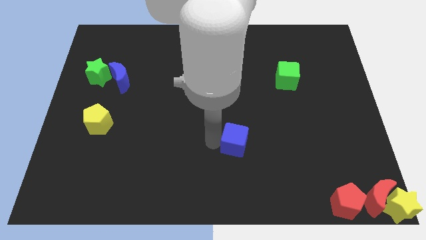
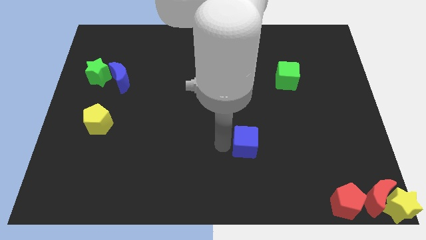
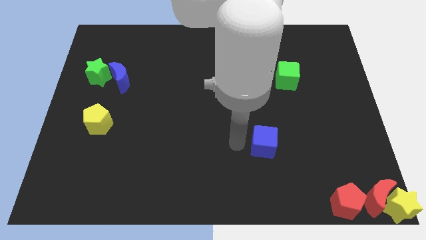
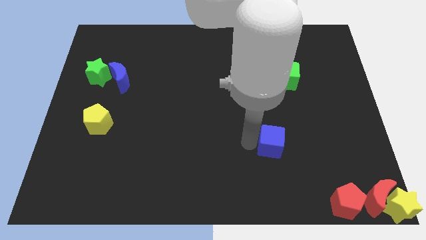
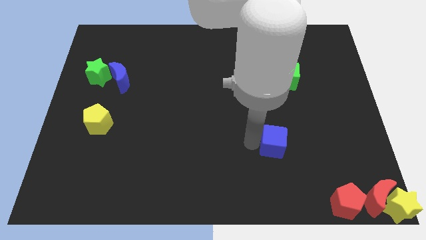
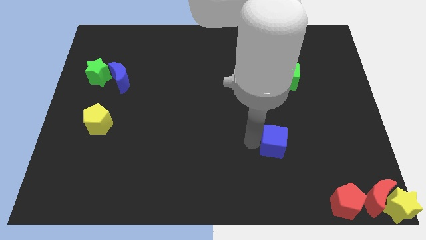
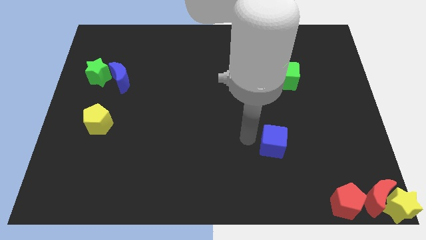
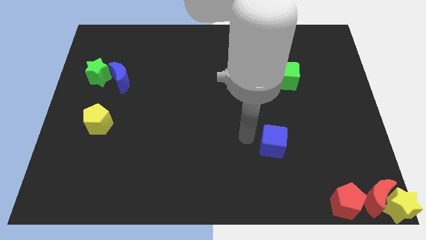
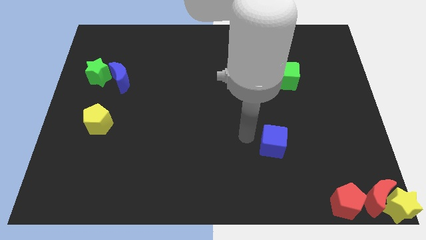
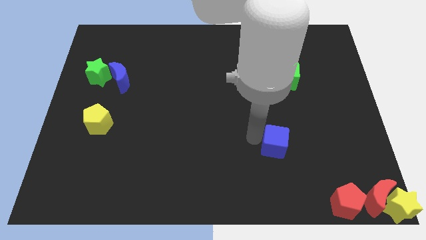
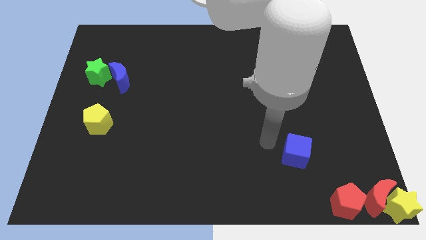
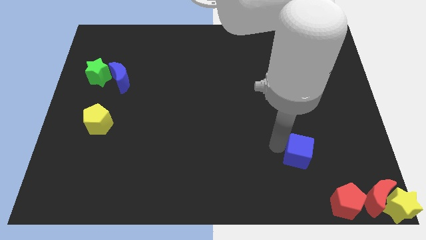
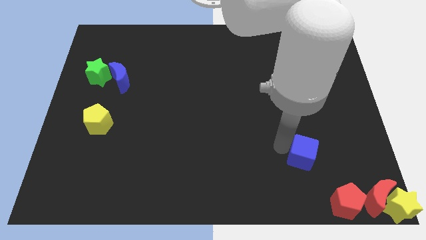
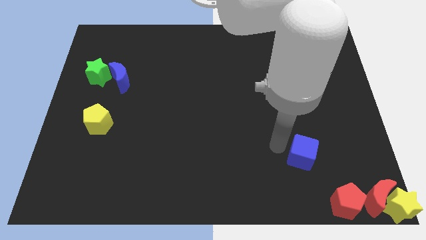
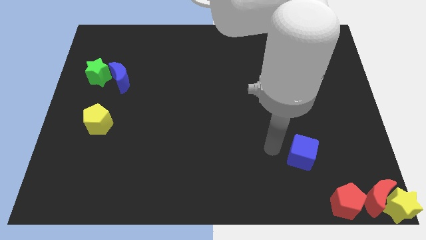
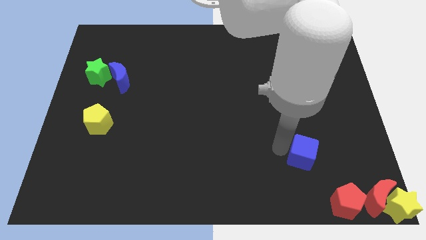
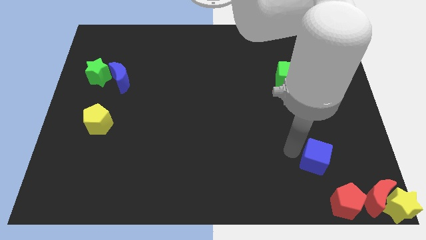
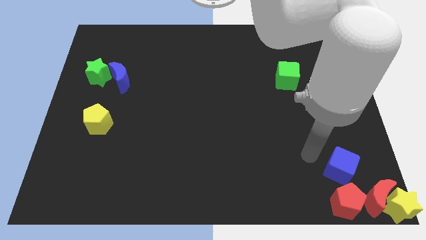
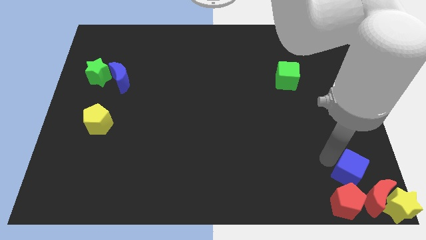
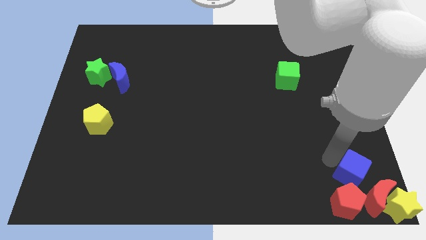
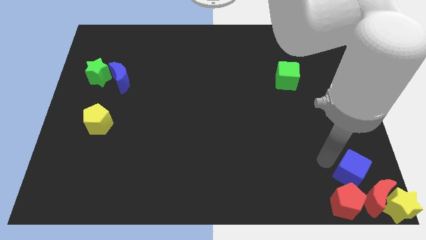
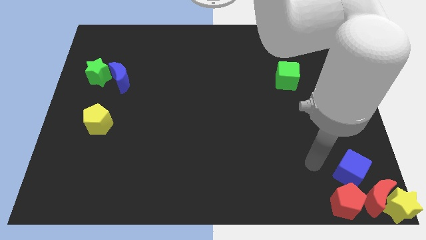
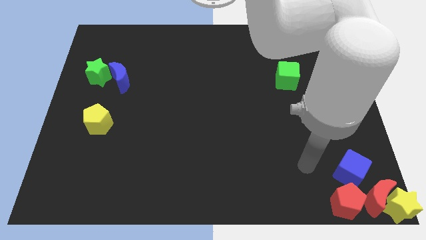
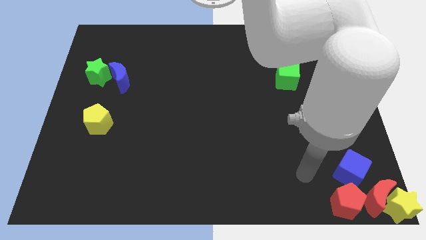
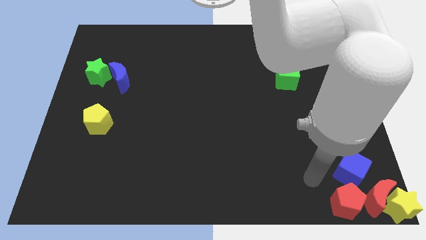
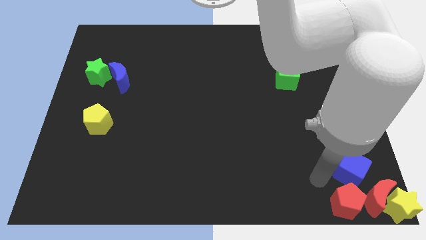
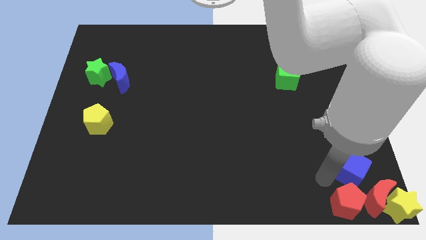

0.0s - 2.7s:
push blue cube above red pentagon

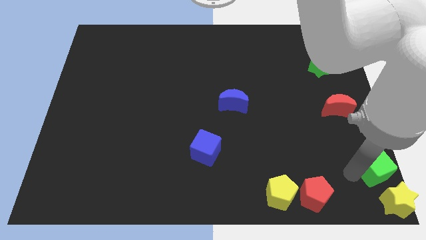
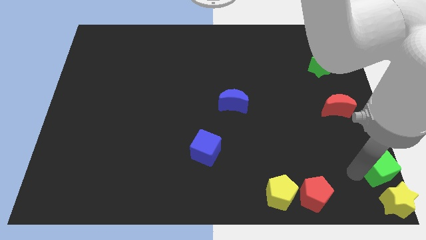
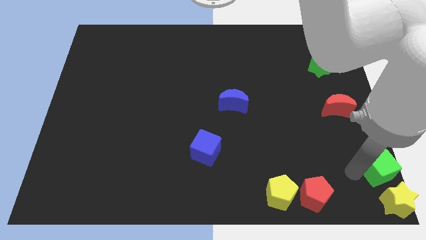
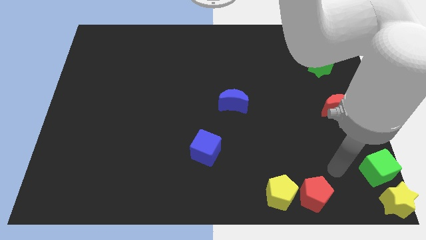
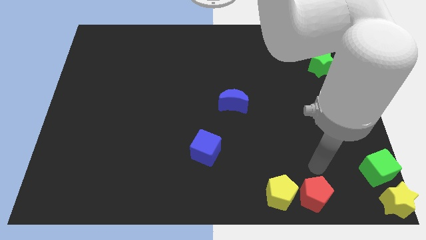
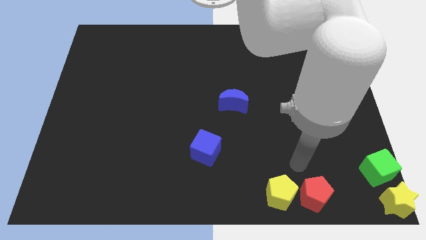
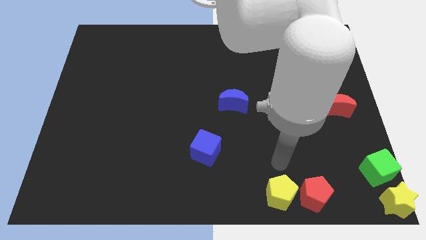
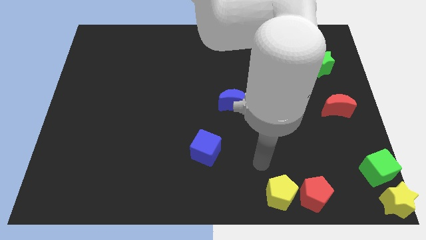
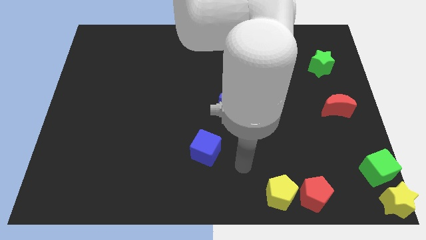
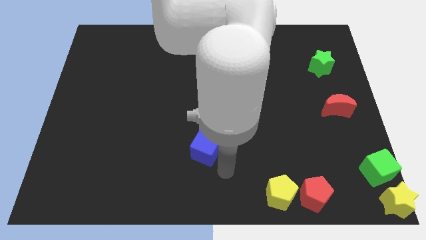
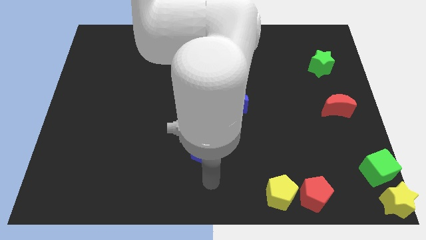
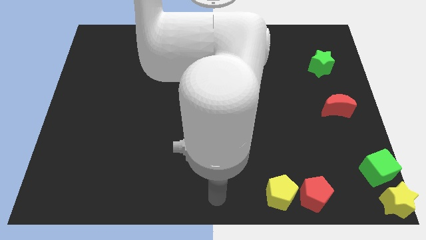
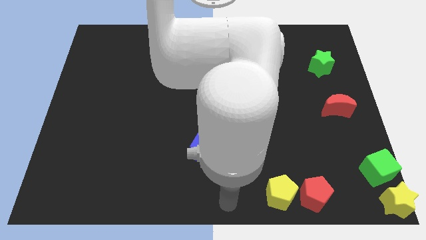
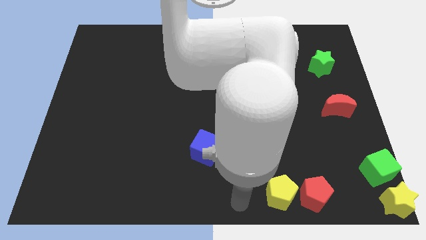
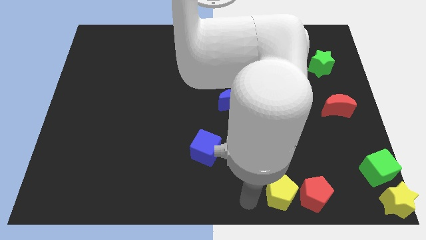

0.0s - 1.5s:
move your arm away from the green cube

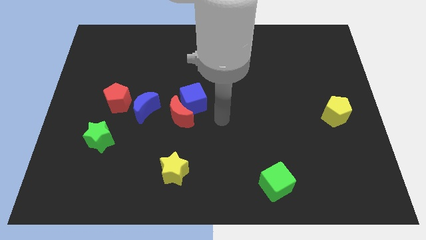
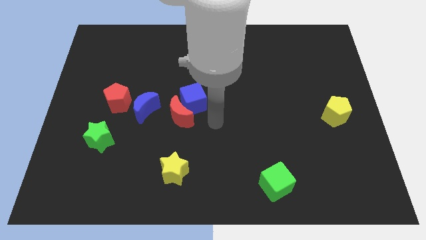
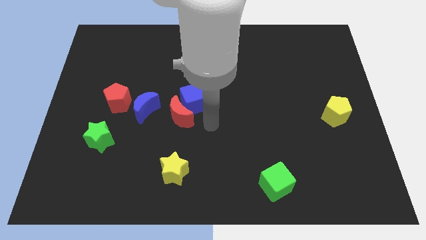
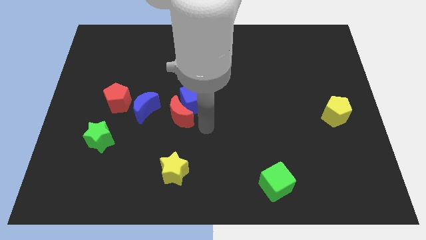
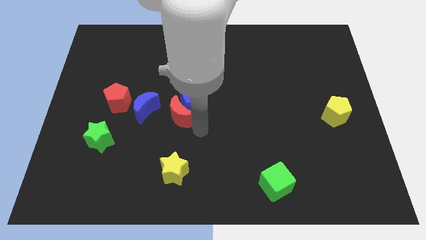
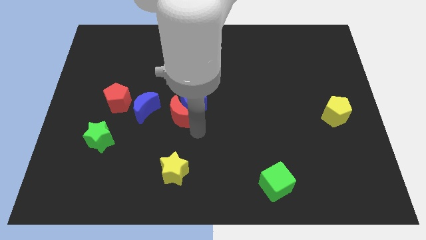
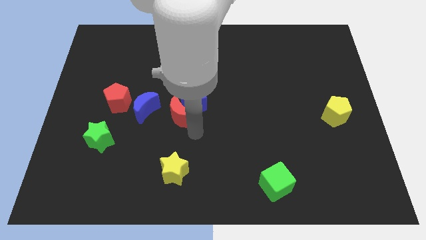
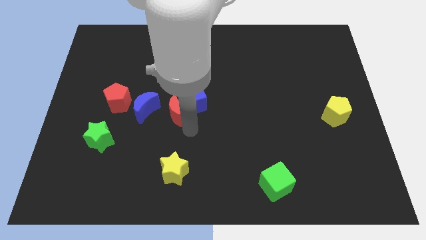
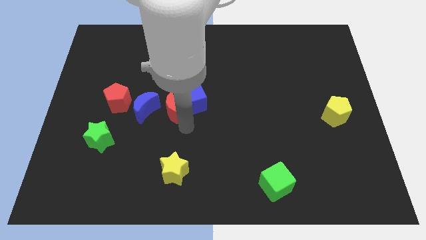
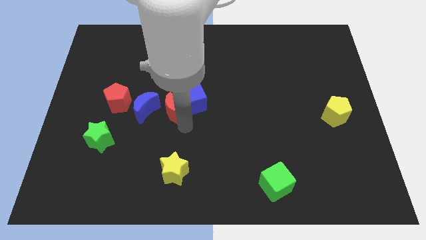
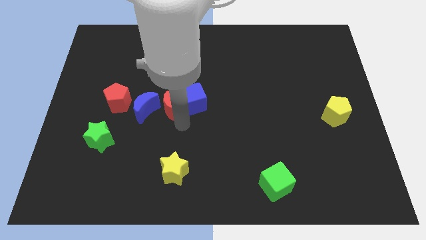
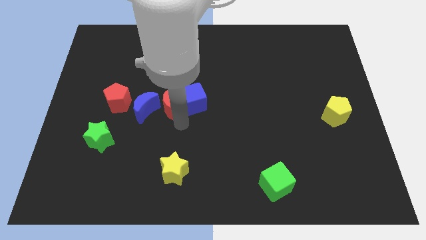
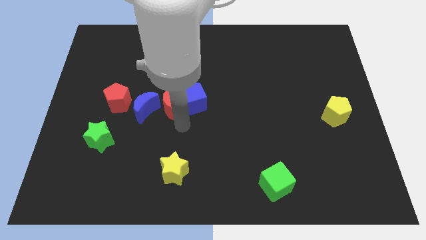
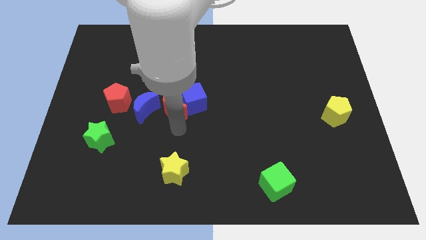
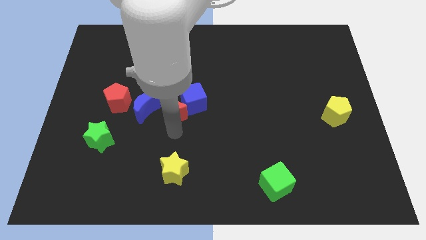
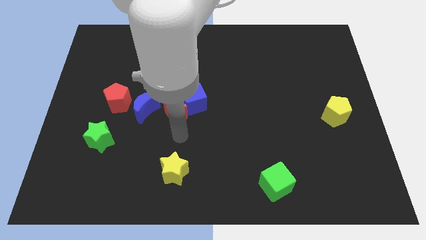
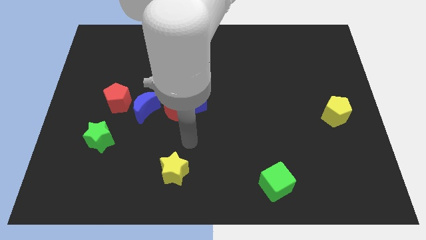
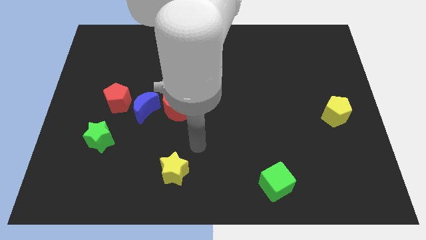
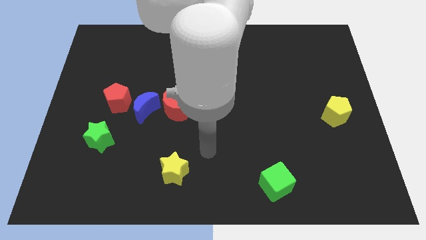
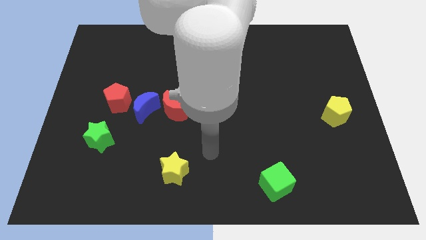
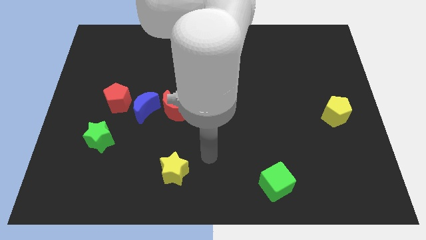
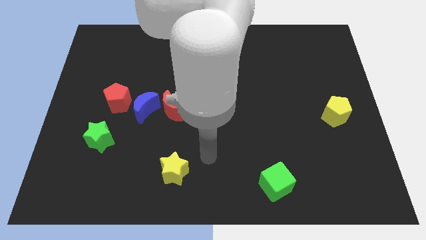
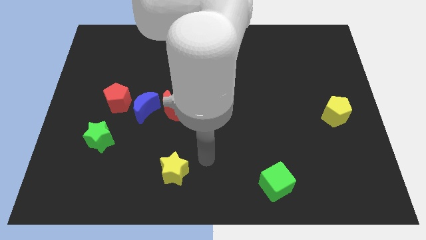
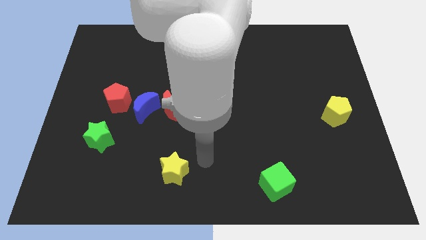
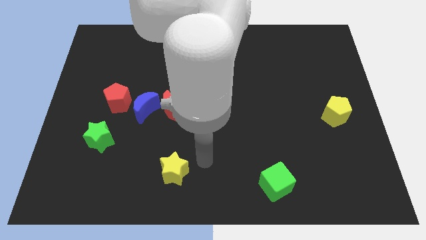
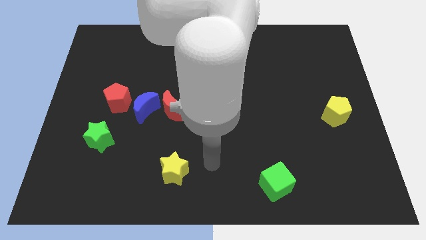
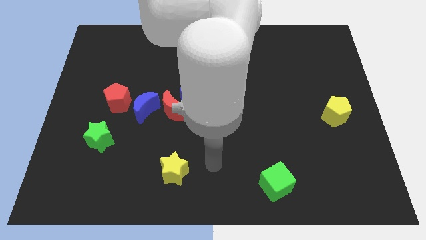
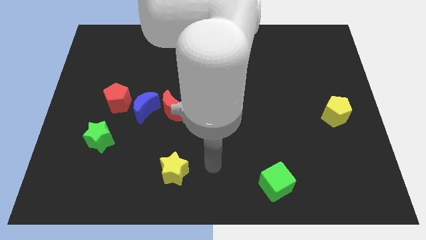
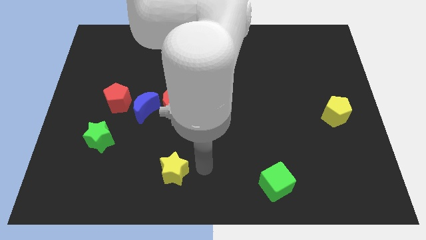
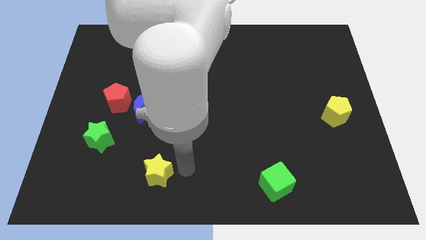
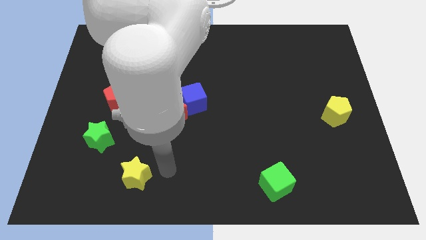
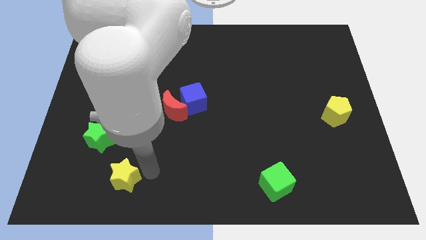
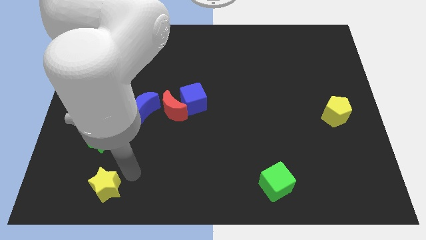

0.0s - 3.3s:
move the yellow star to the bottom left of the board

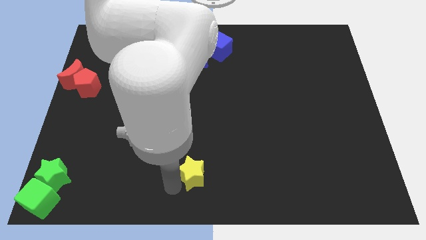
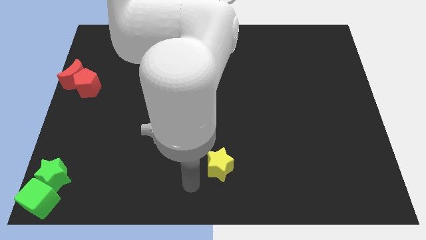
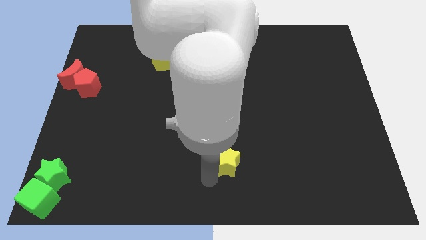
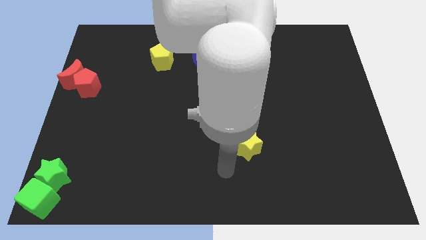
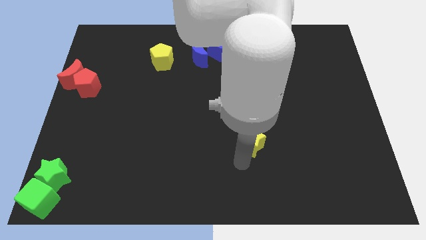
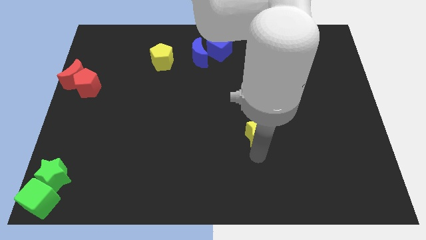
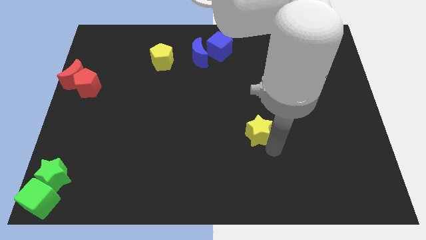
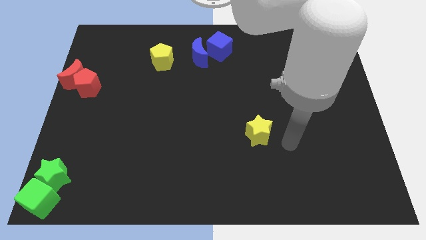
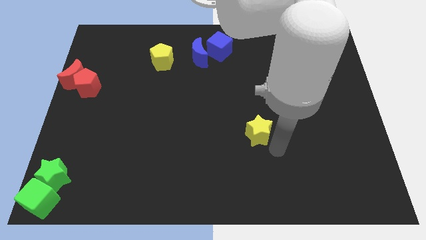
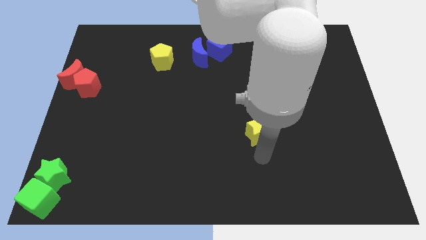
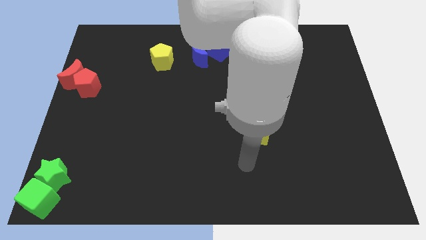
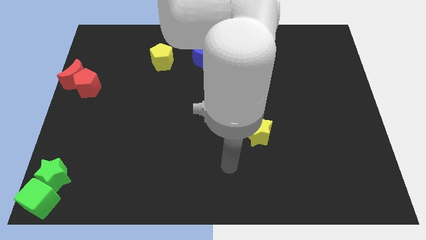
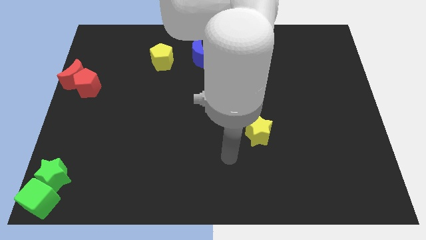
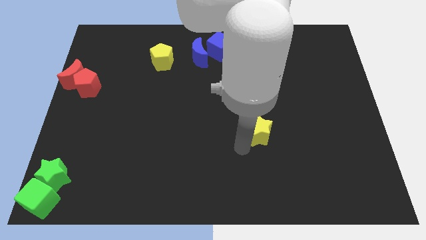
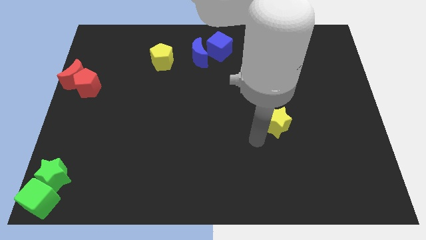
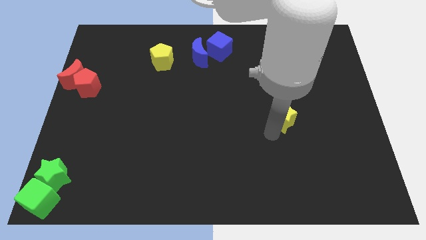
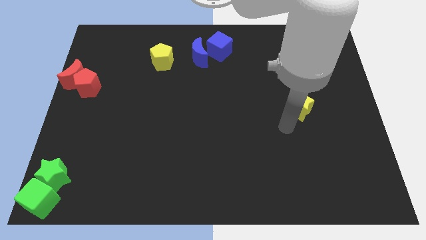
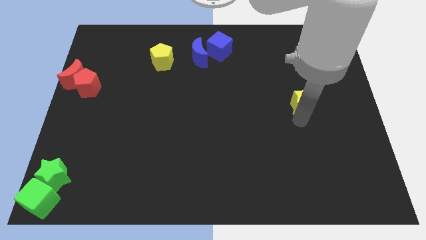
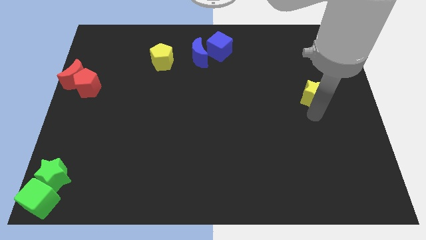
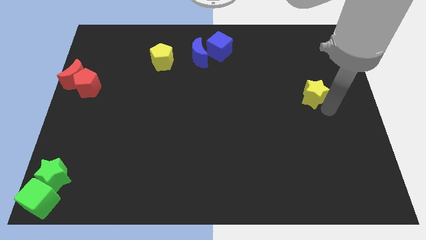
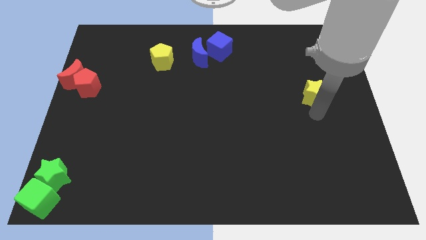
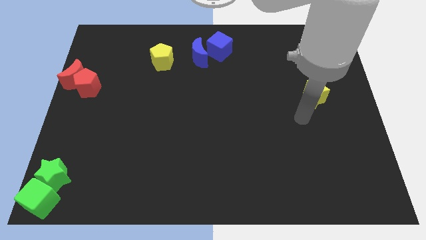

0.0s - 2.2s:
push the yellow star towards the center right
